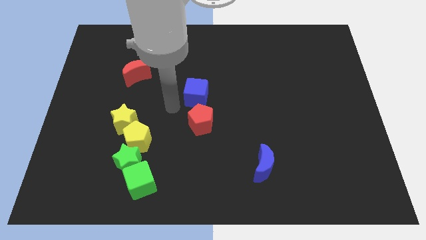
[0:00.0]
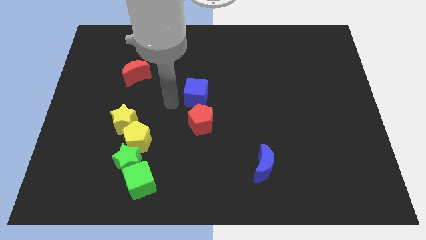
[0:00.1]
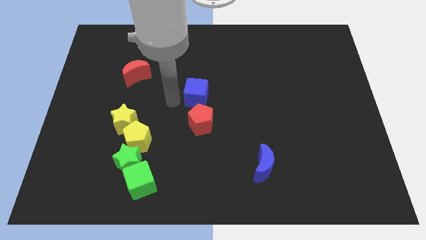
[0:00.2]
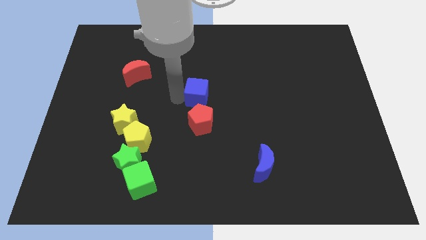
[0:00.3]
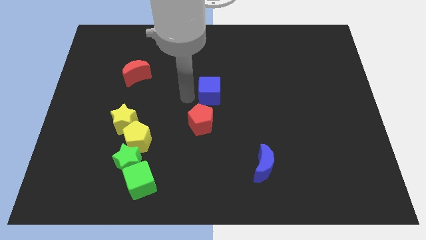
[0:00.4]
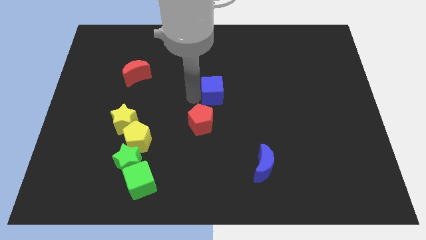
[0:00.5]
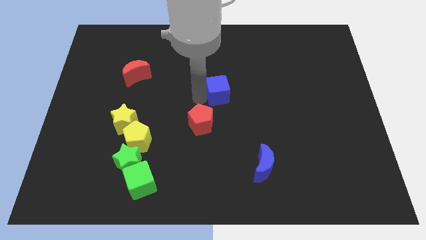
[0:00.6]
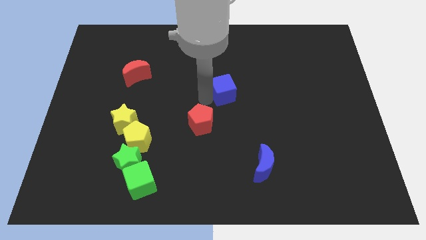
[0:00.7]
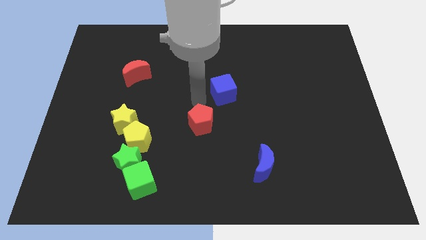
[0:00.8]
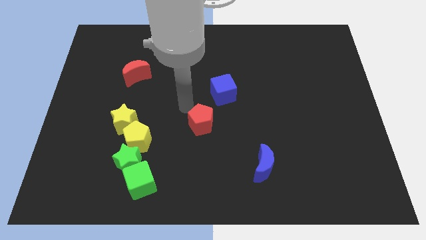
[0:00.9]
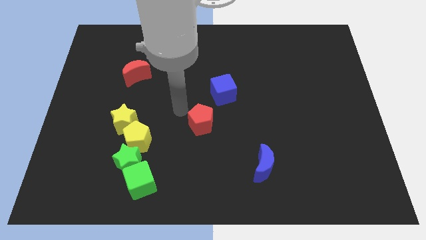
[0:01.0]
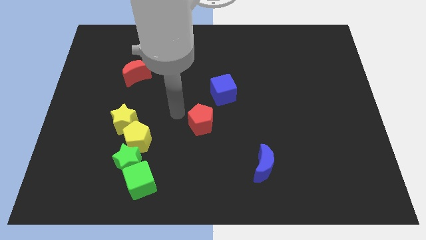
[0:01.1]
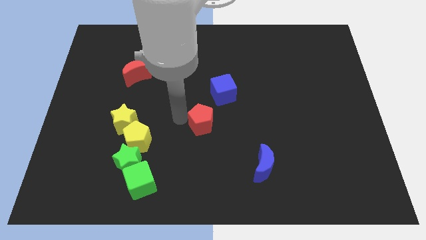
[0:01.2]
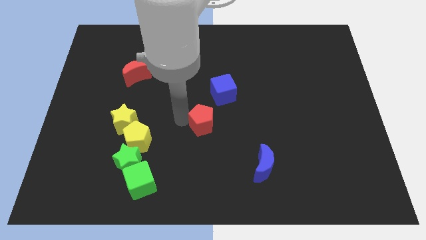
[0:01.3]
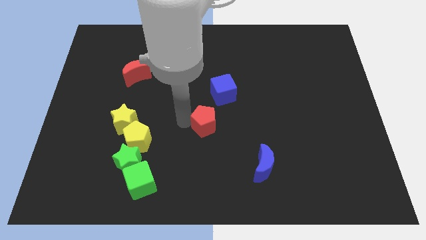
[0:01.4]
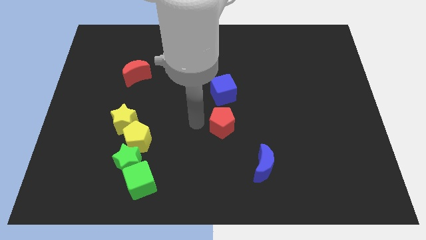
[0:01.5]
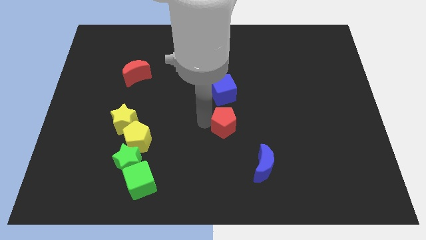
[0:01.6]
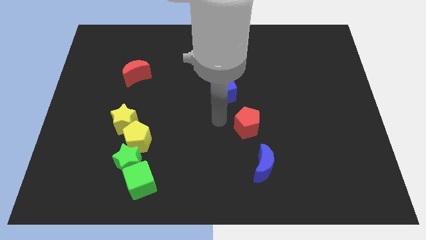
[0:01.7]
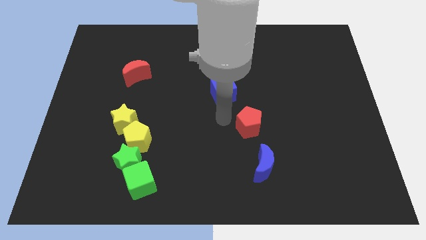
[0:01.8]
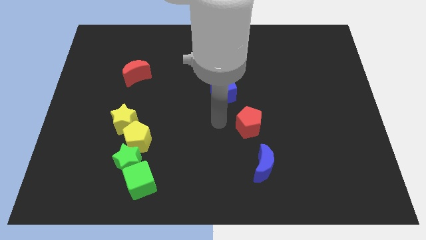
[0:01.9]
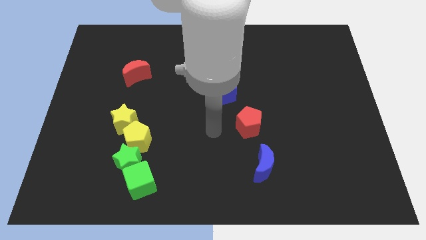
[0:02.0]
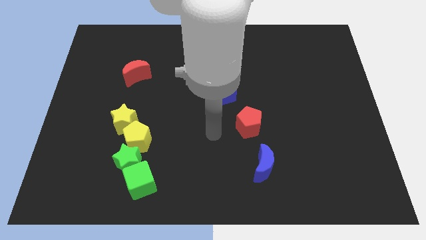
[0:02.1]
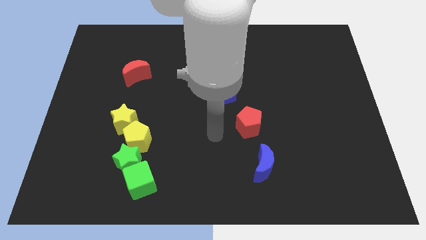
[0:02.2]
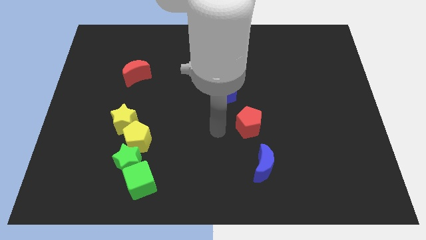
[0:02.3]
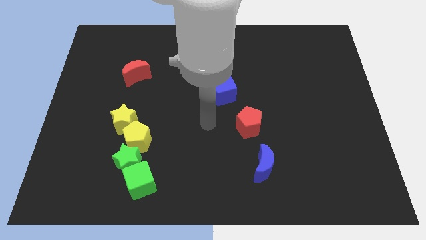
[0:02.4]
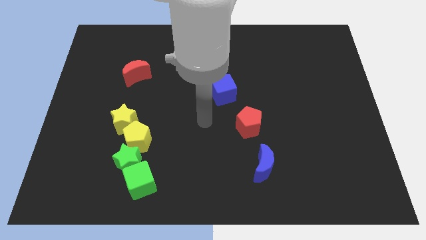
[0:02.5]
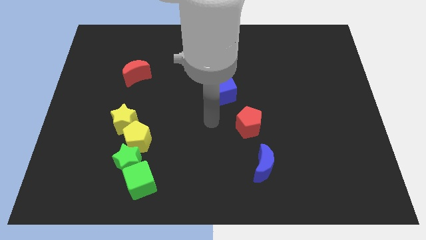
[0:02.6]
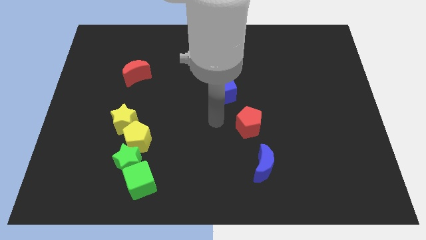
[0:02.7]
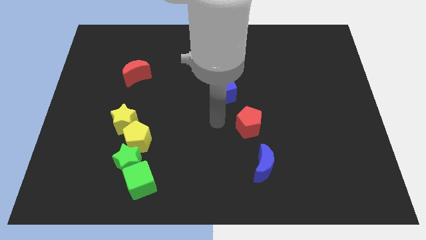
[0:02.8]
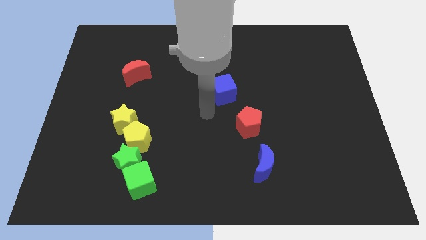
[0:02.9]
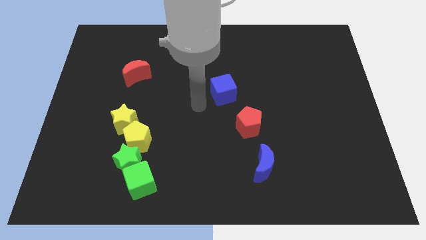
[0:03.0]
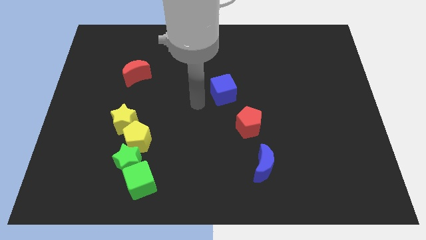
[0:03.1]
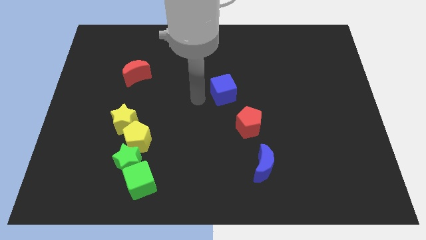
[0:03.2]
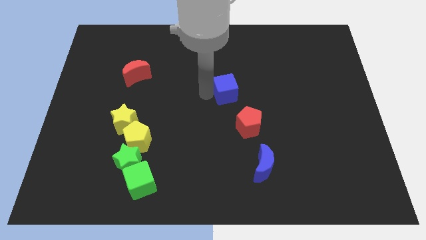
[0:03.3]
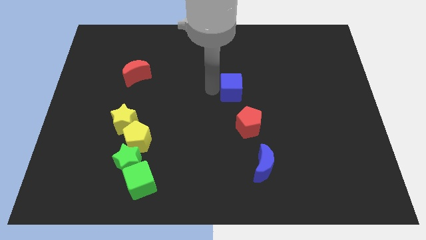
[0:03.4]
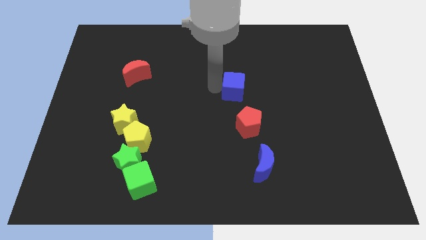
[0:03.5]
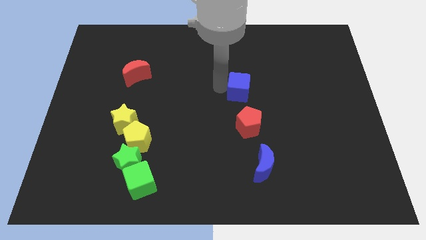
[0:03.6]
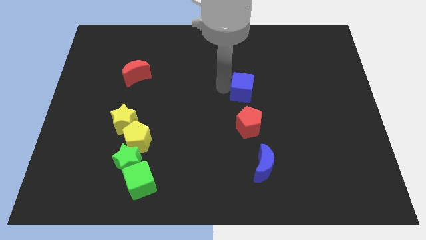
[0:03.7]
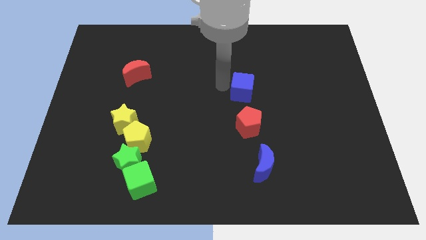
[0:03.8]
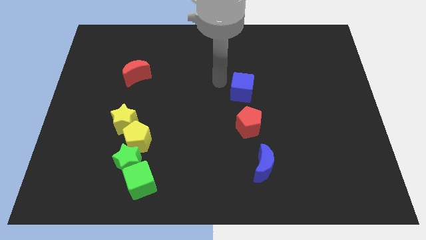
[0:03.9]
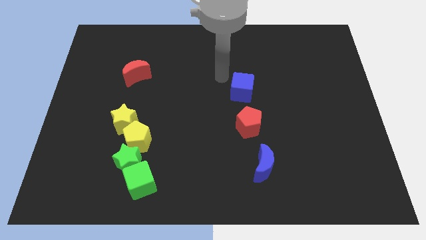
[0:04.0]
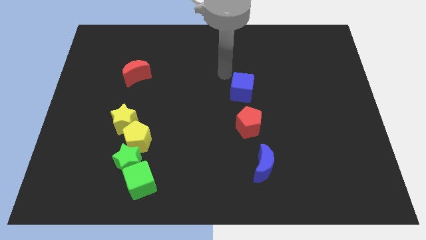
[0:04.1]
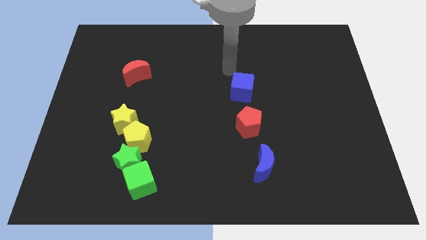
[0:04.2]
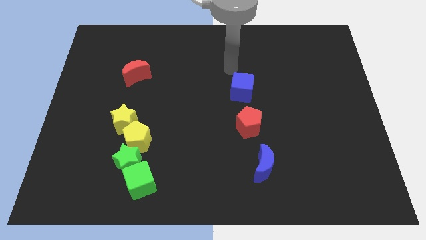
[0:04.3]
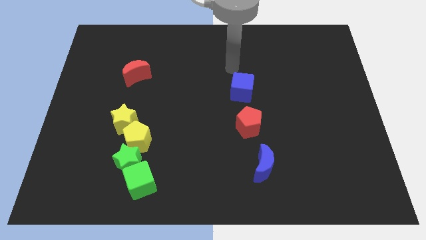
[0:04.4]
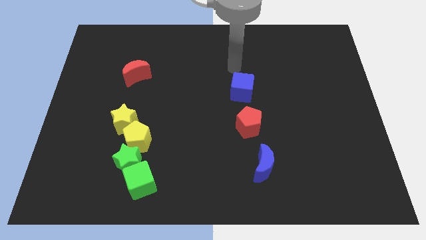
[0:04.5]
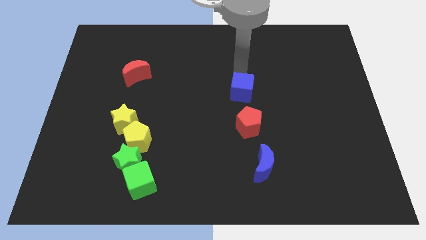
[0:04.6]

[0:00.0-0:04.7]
make a diagonal line with the blue cube red pentagon and blue moon

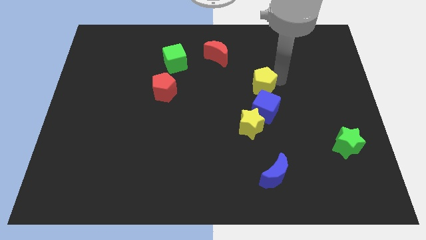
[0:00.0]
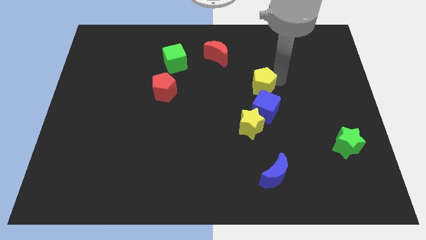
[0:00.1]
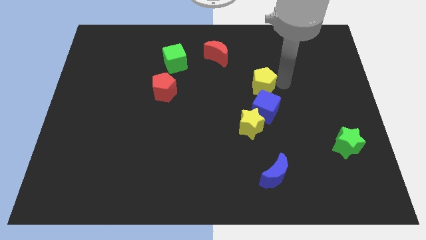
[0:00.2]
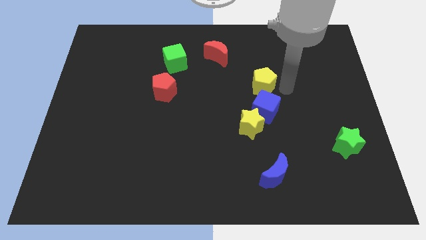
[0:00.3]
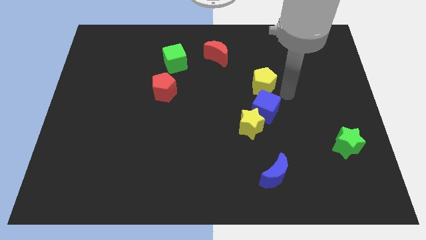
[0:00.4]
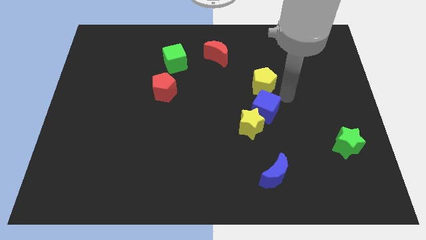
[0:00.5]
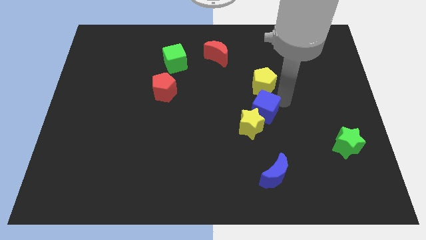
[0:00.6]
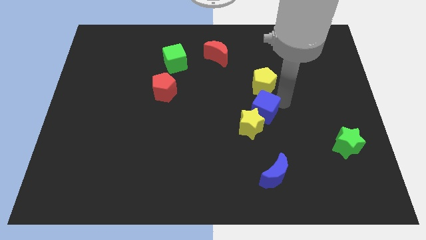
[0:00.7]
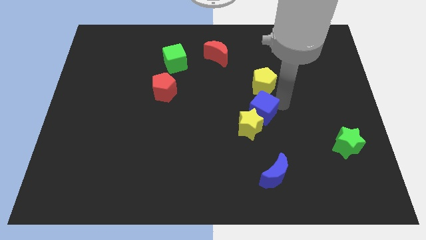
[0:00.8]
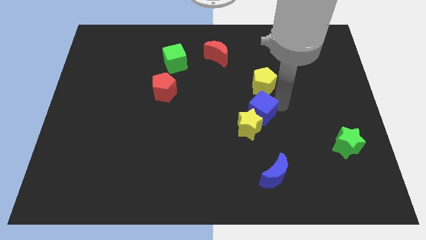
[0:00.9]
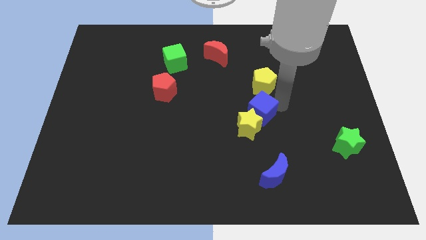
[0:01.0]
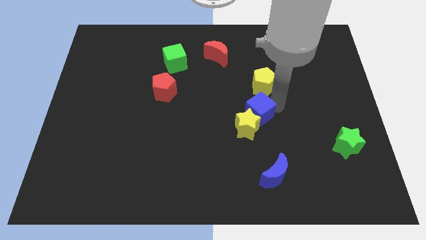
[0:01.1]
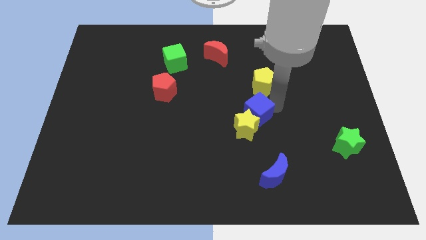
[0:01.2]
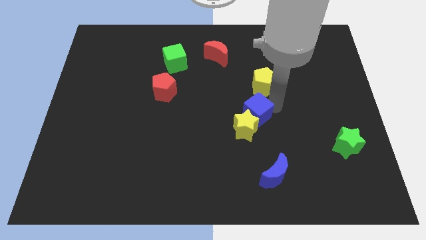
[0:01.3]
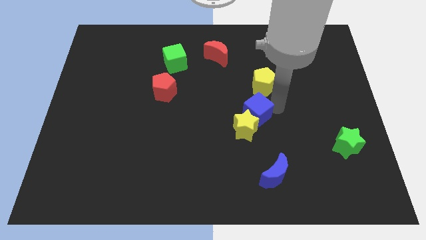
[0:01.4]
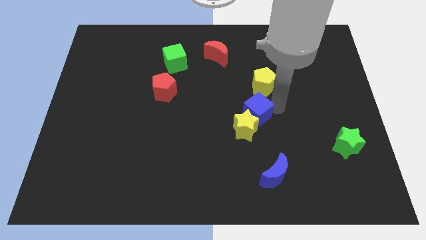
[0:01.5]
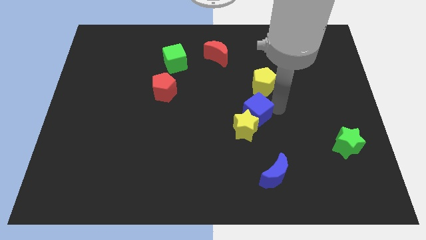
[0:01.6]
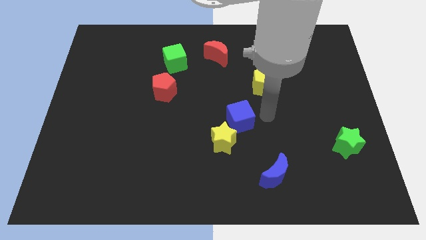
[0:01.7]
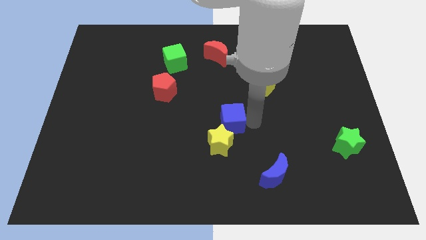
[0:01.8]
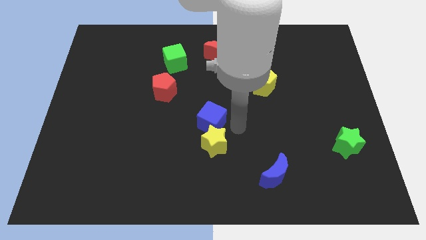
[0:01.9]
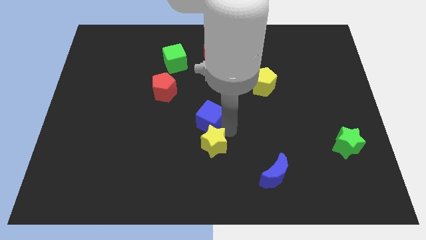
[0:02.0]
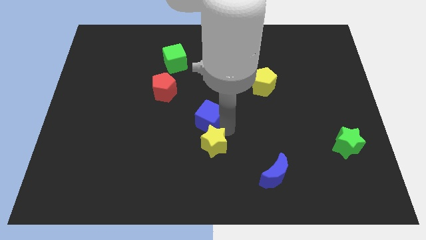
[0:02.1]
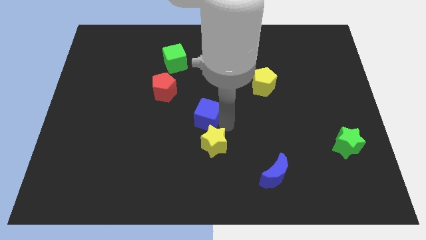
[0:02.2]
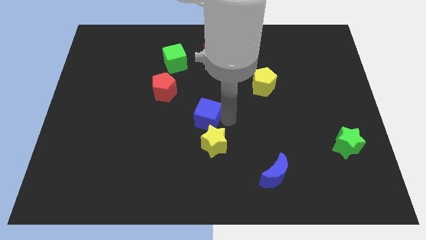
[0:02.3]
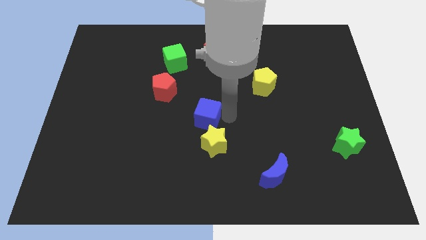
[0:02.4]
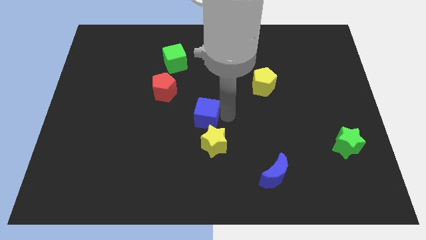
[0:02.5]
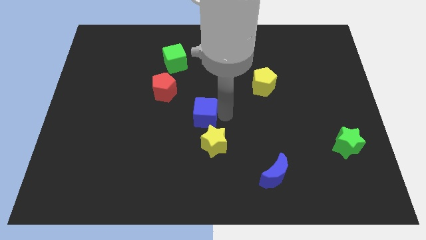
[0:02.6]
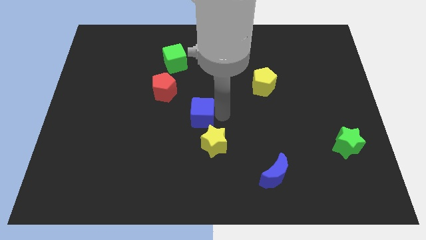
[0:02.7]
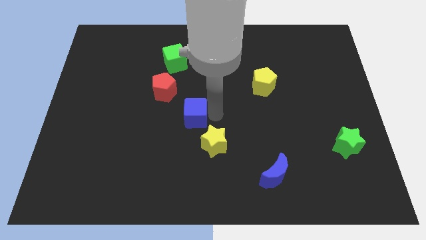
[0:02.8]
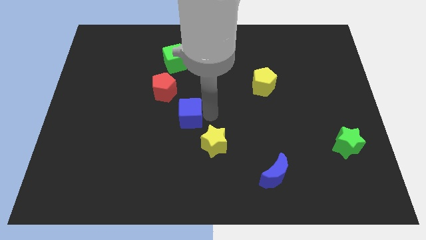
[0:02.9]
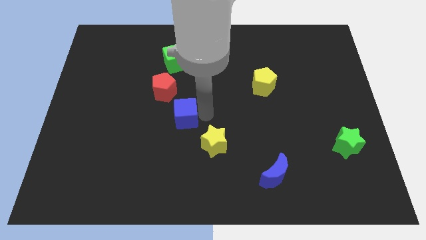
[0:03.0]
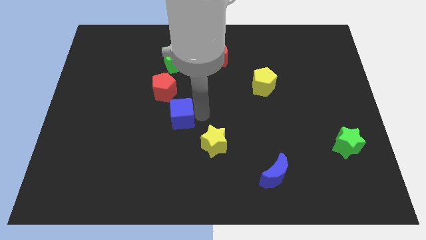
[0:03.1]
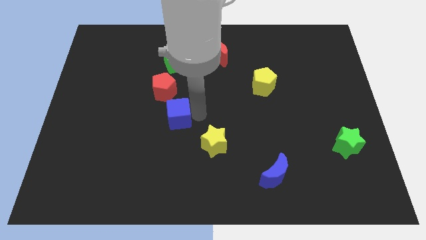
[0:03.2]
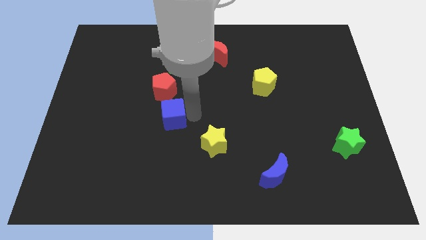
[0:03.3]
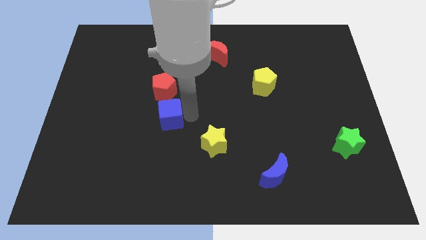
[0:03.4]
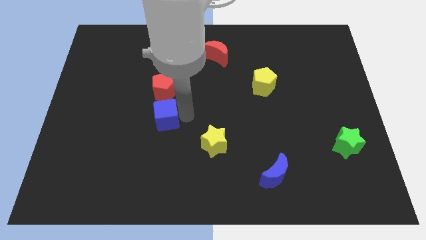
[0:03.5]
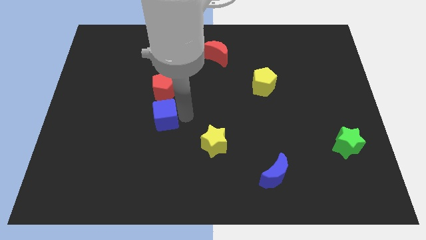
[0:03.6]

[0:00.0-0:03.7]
drag the blue cube to the bottom red pentagon

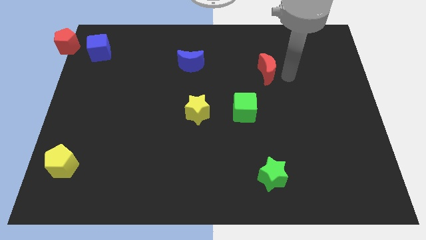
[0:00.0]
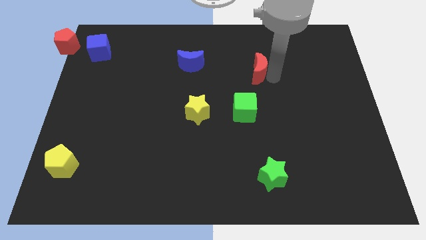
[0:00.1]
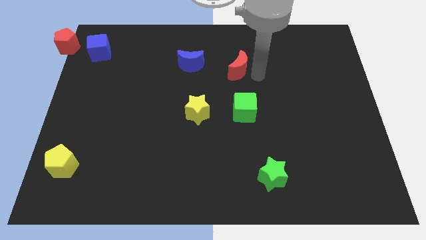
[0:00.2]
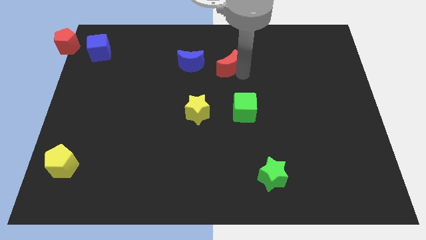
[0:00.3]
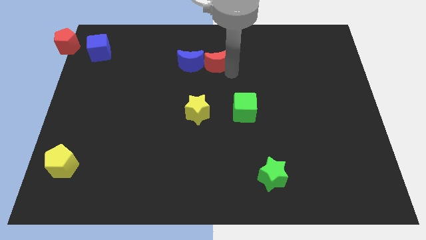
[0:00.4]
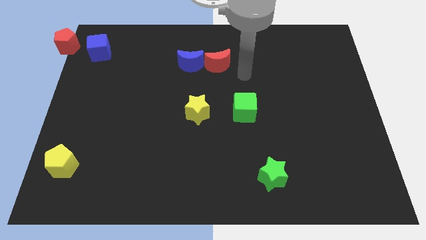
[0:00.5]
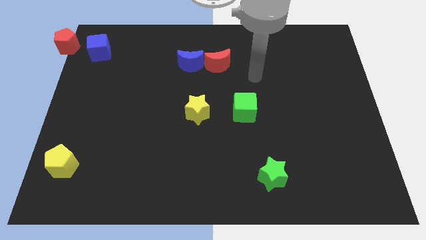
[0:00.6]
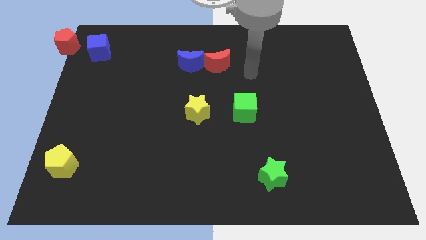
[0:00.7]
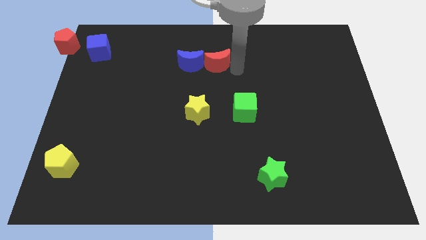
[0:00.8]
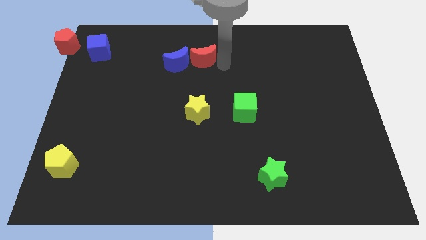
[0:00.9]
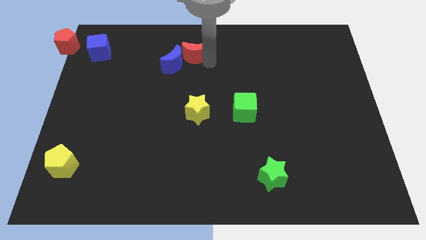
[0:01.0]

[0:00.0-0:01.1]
slide red crescent above yellow star
